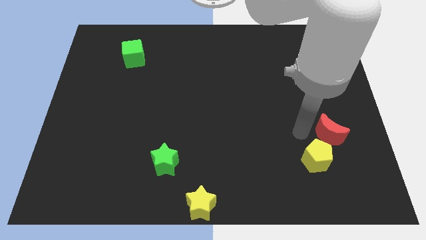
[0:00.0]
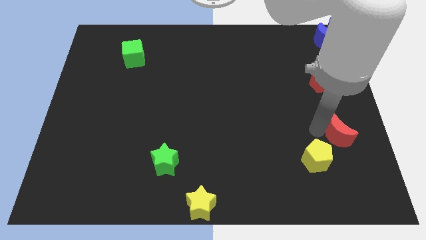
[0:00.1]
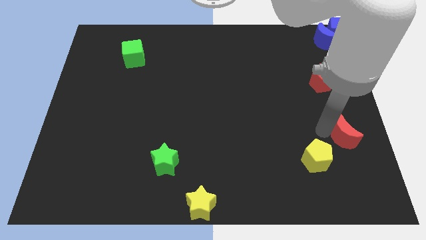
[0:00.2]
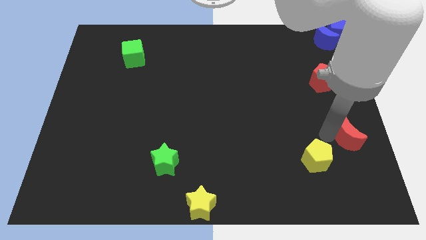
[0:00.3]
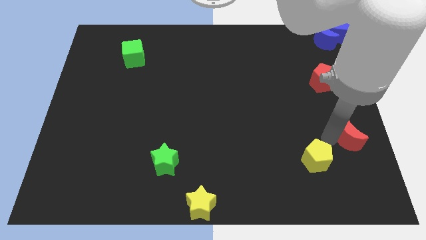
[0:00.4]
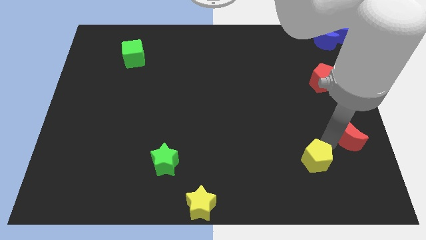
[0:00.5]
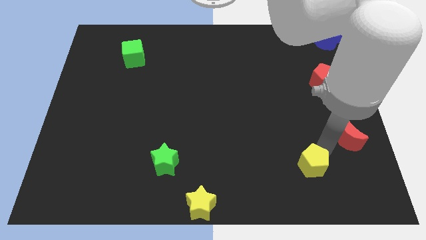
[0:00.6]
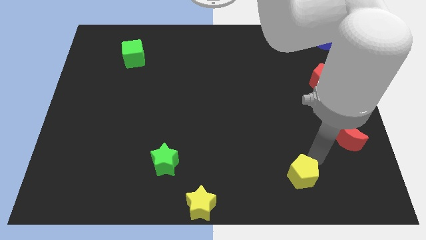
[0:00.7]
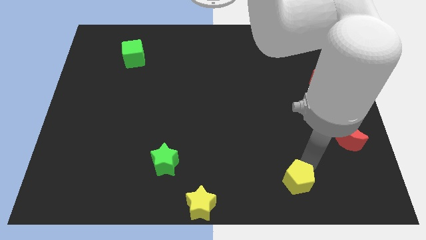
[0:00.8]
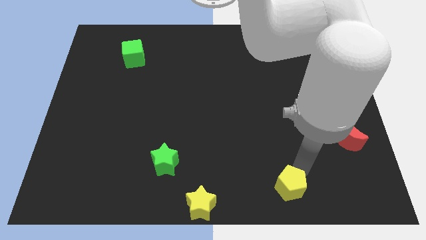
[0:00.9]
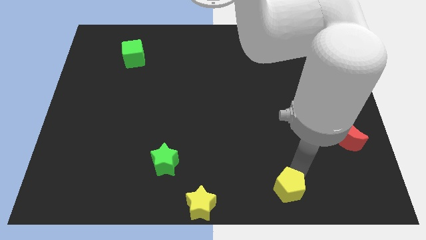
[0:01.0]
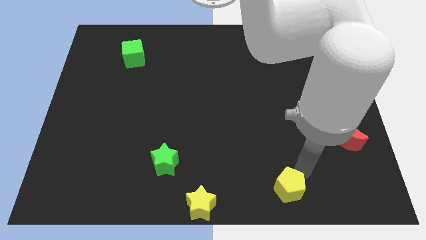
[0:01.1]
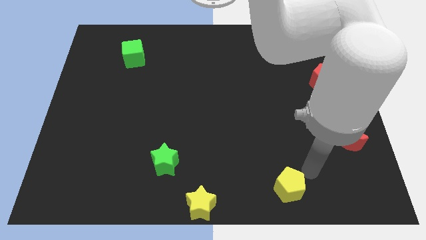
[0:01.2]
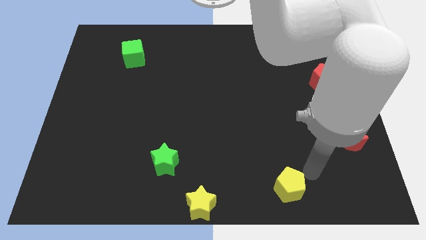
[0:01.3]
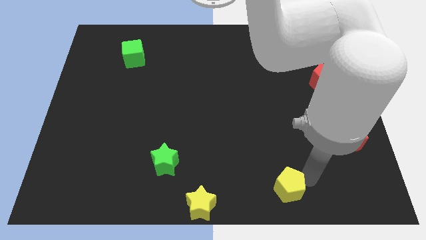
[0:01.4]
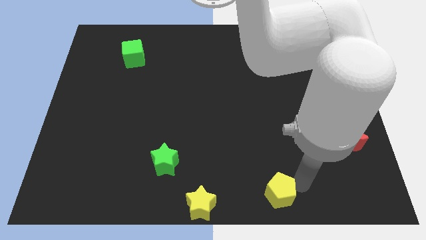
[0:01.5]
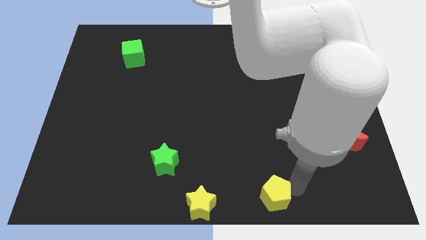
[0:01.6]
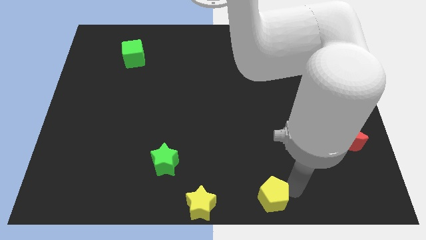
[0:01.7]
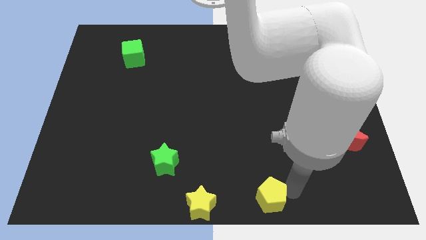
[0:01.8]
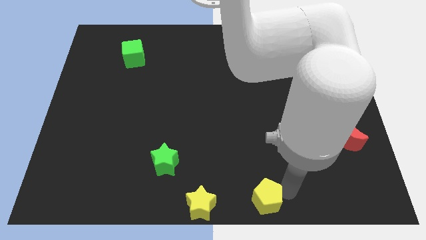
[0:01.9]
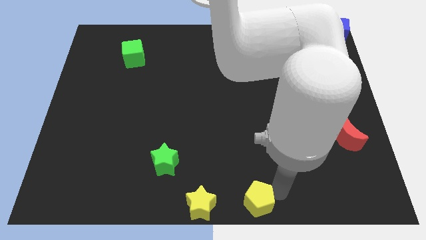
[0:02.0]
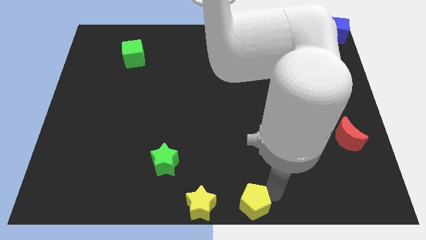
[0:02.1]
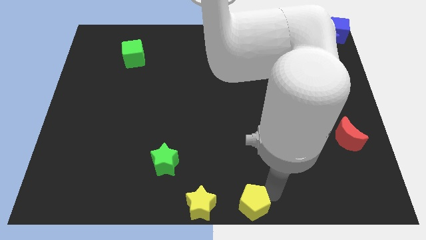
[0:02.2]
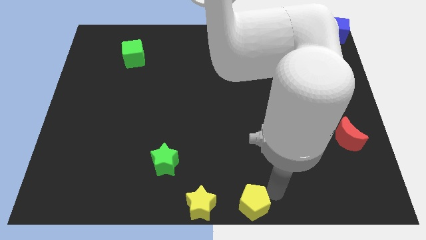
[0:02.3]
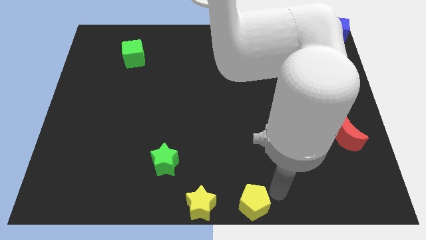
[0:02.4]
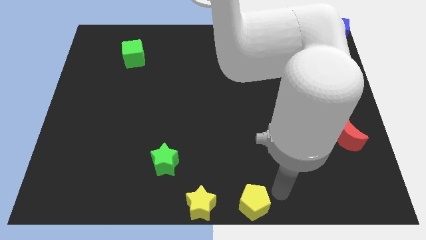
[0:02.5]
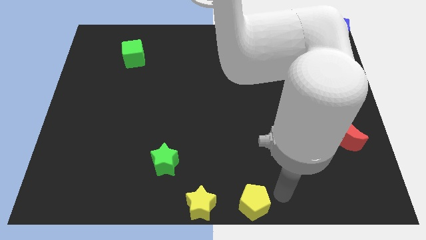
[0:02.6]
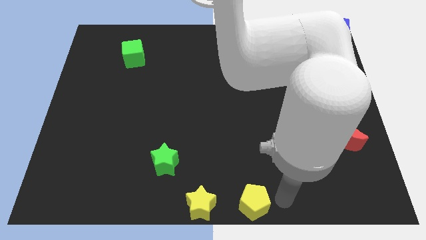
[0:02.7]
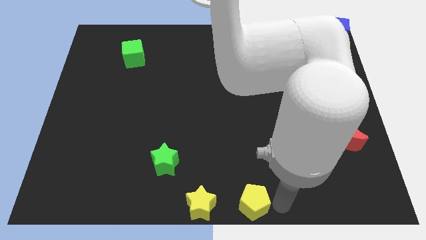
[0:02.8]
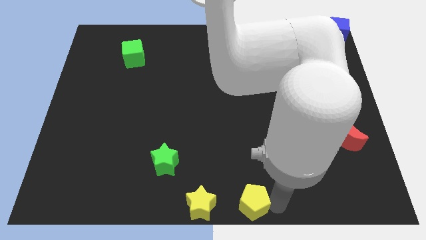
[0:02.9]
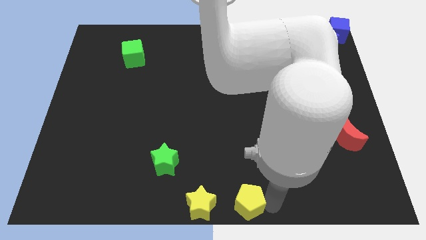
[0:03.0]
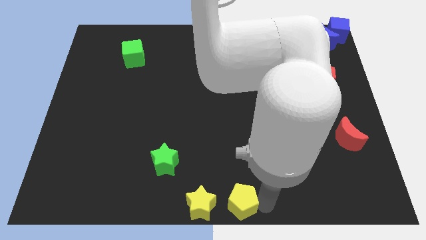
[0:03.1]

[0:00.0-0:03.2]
place the yellow pentagon to the right of the yellow star

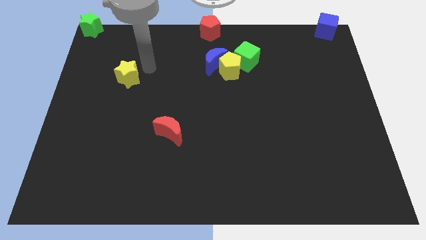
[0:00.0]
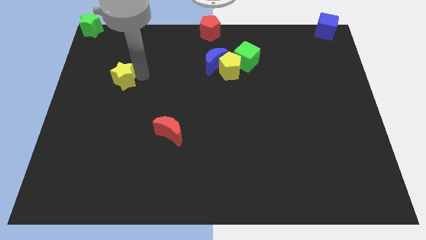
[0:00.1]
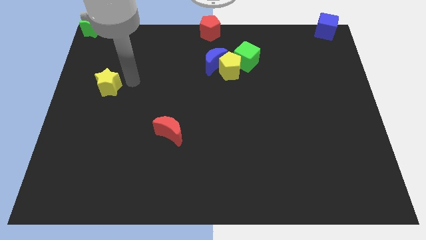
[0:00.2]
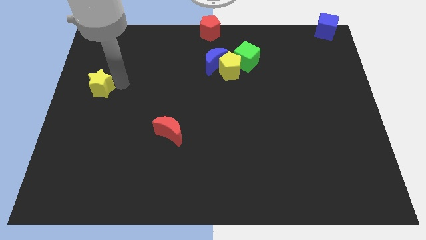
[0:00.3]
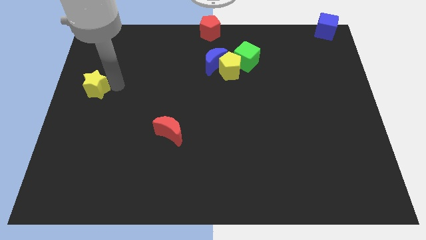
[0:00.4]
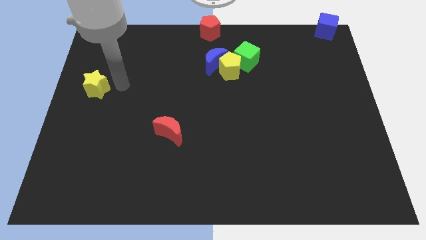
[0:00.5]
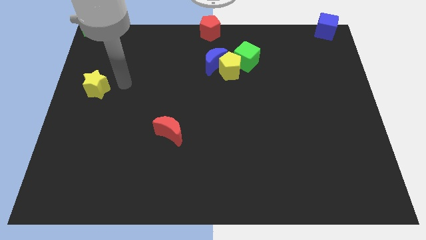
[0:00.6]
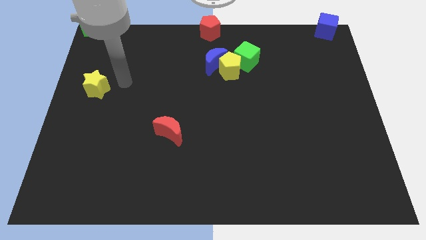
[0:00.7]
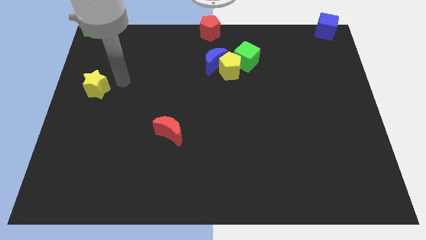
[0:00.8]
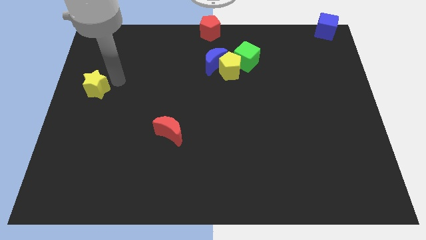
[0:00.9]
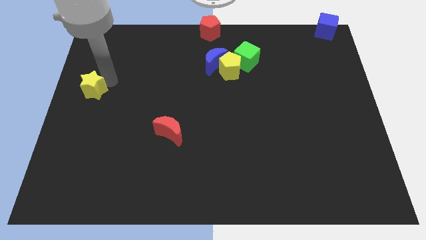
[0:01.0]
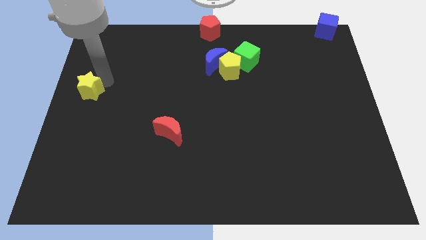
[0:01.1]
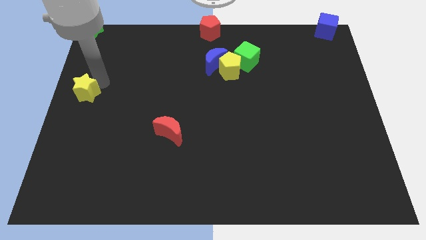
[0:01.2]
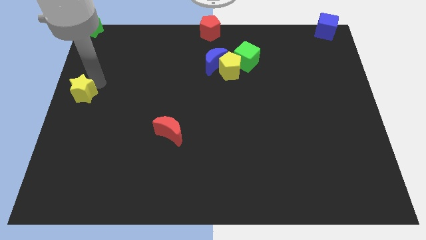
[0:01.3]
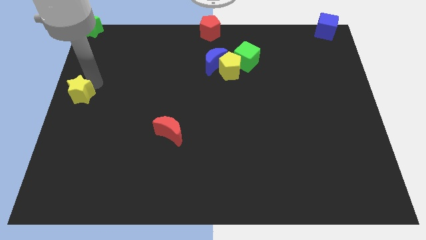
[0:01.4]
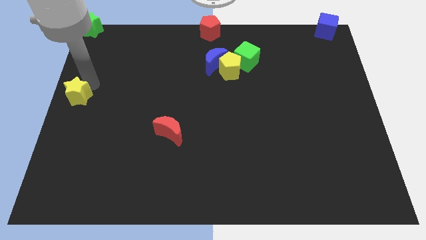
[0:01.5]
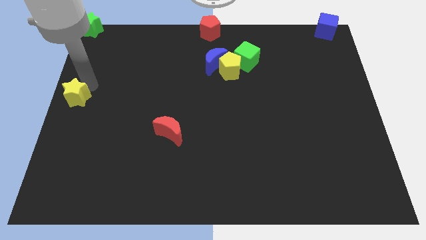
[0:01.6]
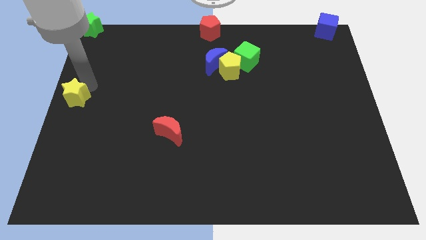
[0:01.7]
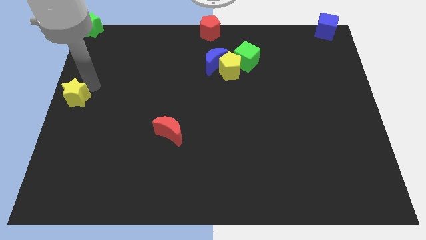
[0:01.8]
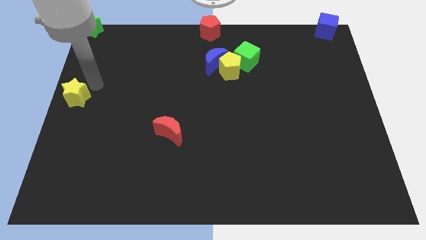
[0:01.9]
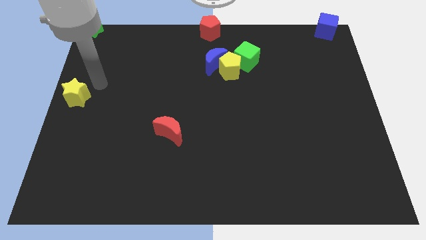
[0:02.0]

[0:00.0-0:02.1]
push the yellow star to the bottom of the green star

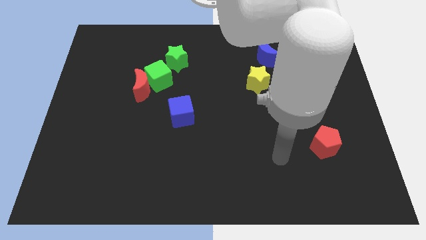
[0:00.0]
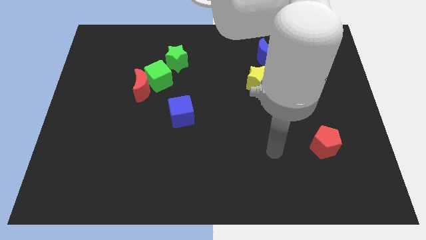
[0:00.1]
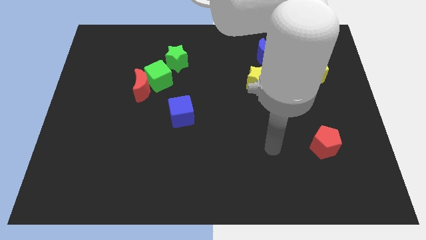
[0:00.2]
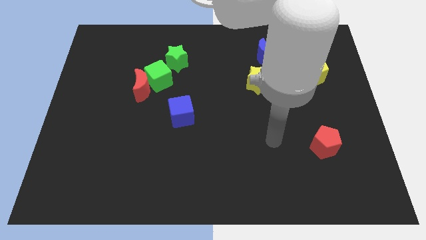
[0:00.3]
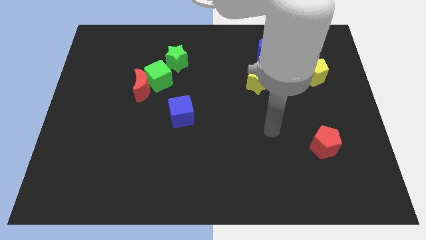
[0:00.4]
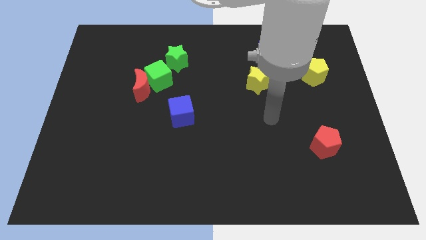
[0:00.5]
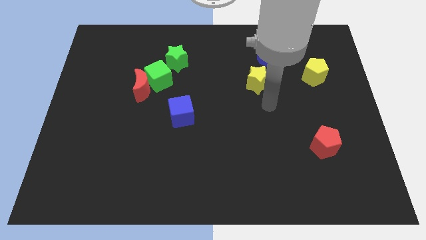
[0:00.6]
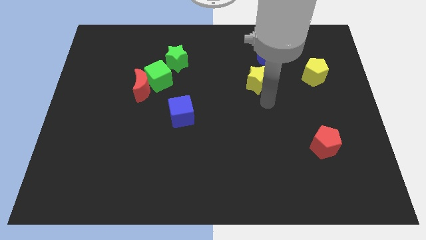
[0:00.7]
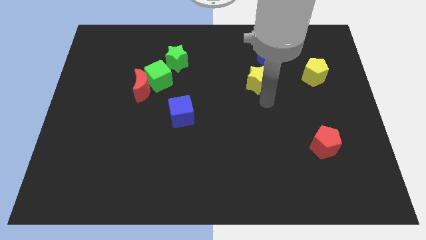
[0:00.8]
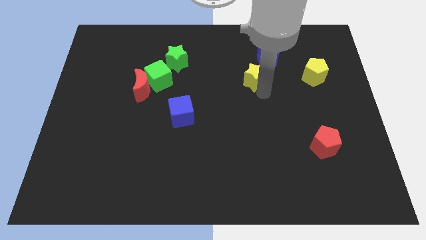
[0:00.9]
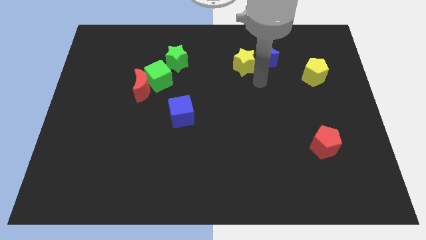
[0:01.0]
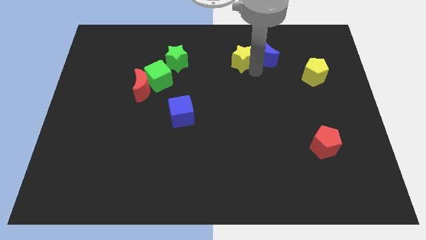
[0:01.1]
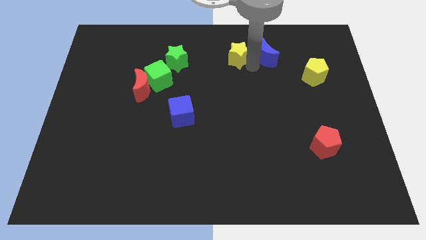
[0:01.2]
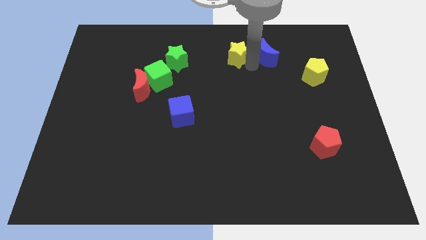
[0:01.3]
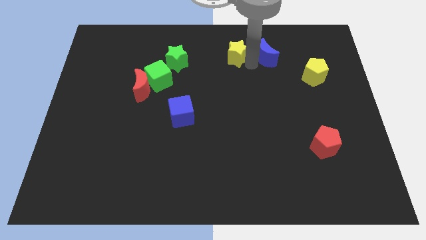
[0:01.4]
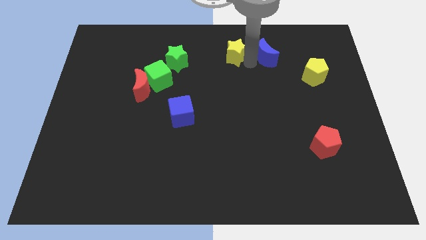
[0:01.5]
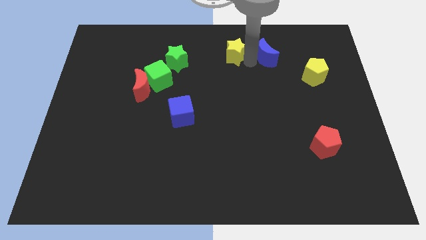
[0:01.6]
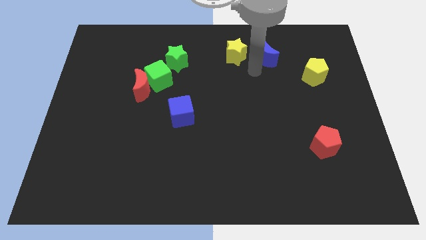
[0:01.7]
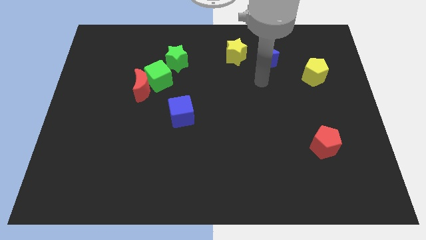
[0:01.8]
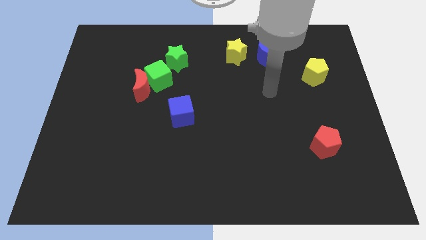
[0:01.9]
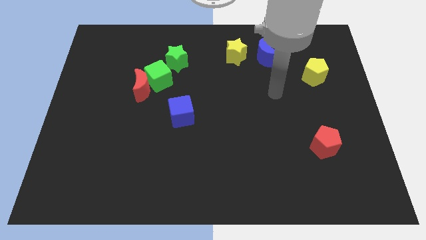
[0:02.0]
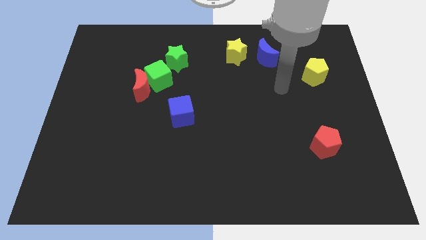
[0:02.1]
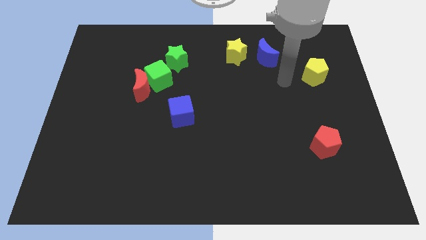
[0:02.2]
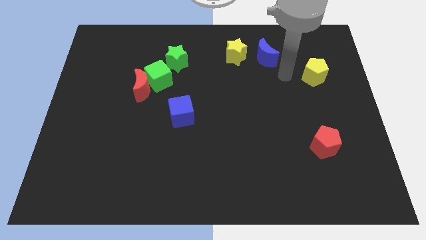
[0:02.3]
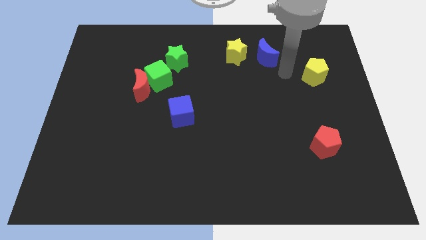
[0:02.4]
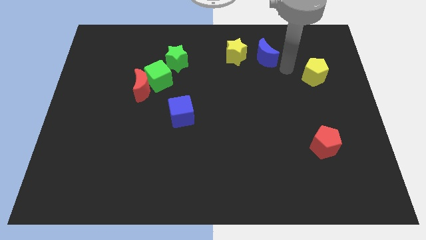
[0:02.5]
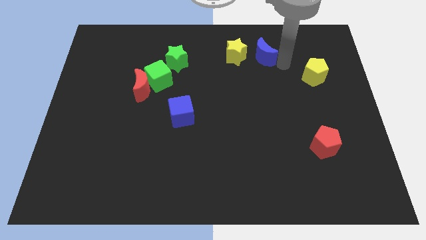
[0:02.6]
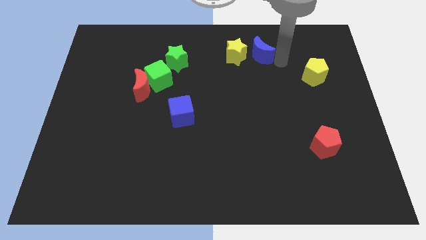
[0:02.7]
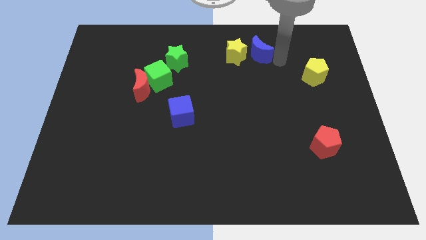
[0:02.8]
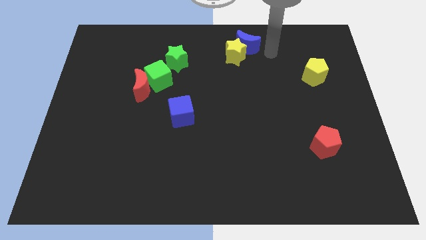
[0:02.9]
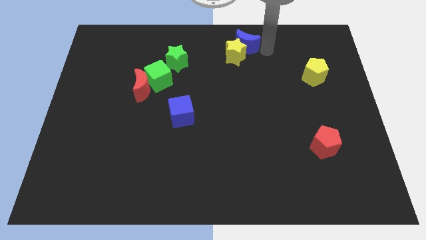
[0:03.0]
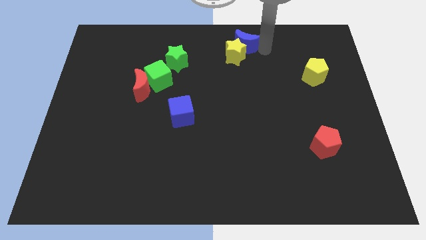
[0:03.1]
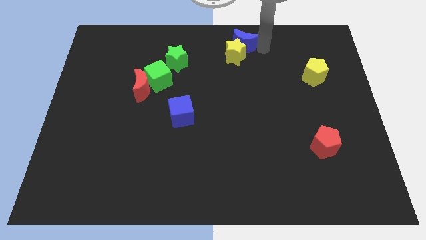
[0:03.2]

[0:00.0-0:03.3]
move your arm towards the yellow star

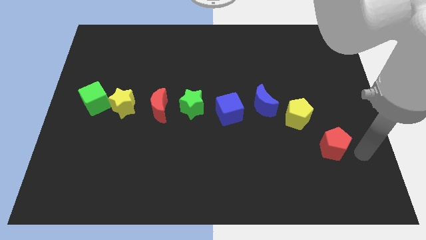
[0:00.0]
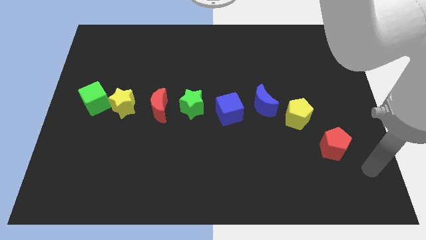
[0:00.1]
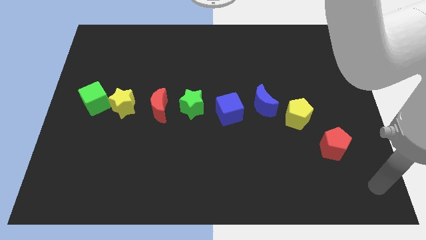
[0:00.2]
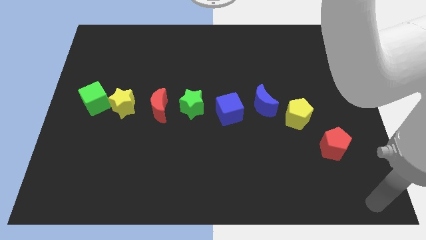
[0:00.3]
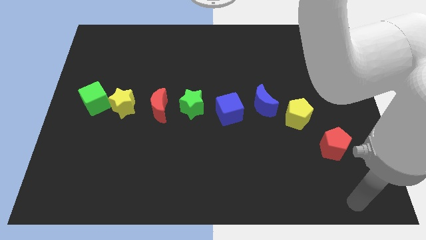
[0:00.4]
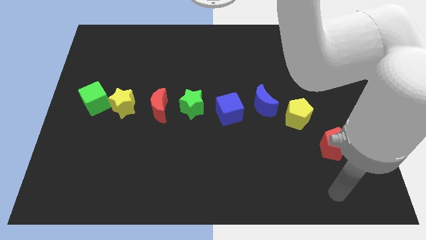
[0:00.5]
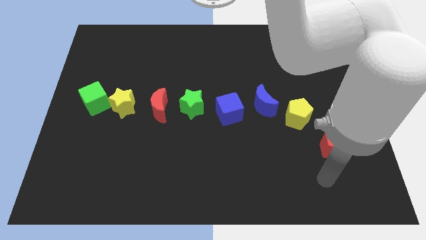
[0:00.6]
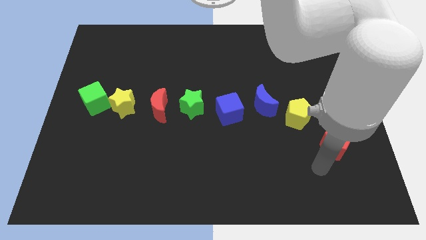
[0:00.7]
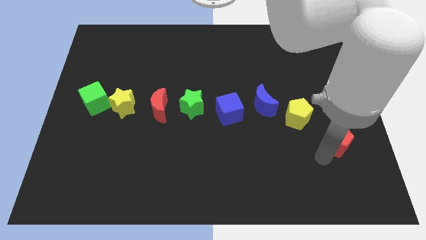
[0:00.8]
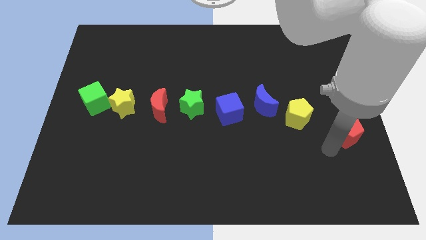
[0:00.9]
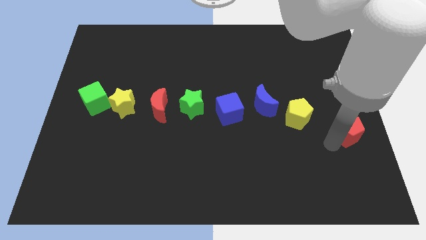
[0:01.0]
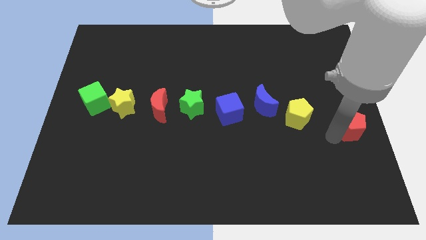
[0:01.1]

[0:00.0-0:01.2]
push the red pentagon to the right center of the board
